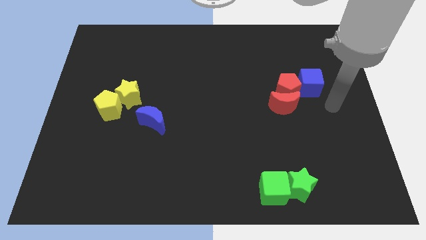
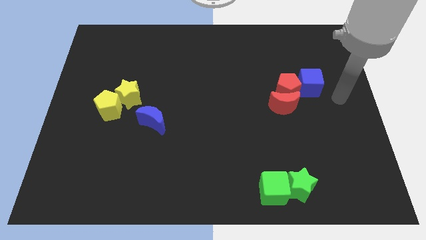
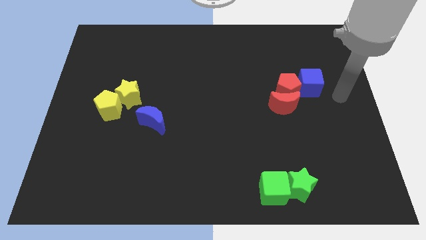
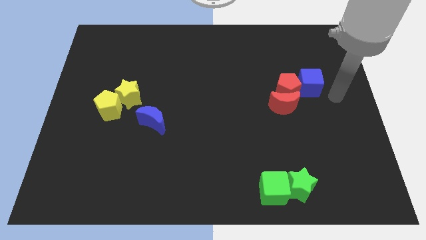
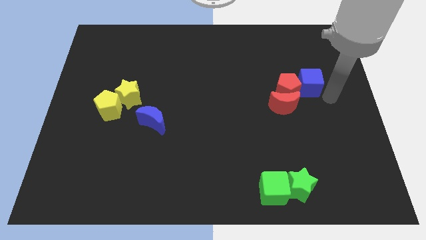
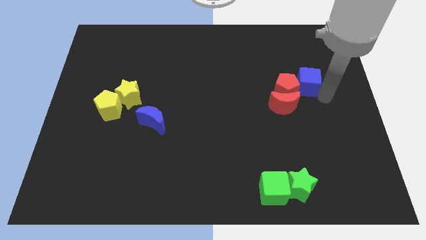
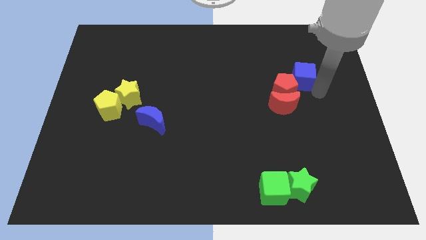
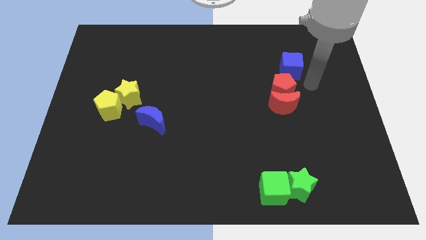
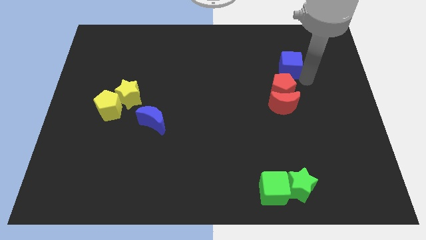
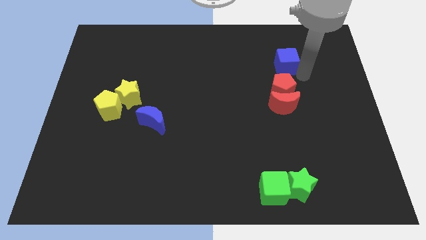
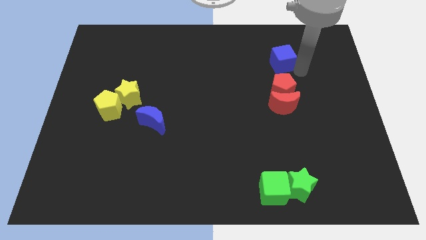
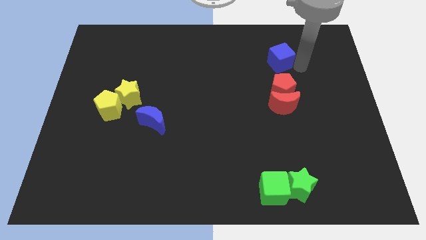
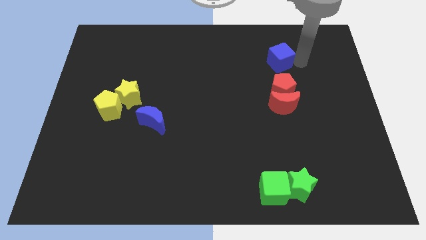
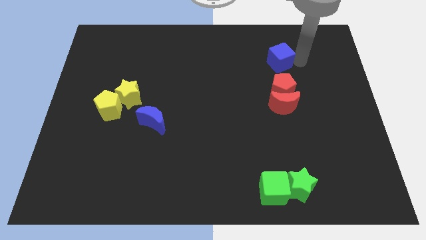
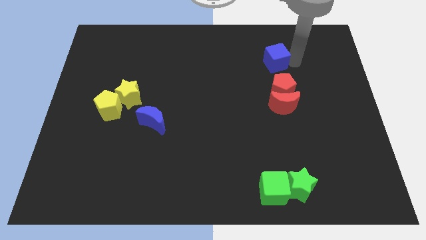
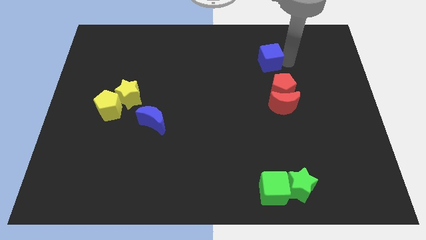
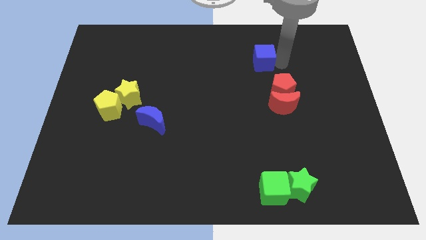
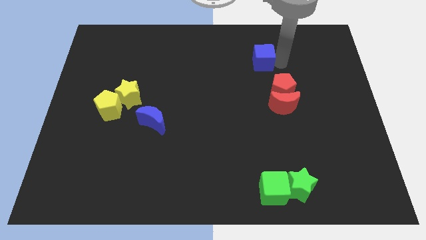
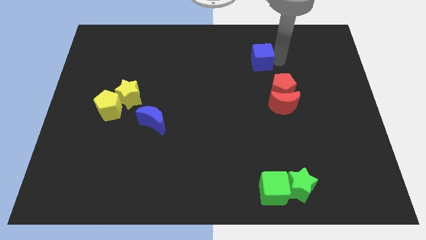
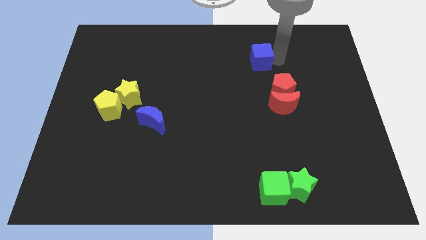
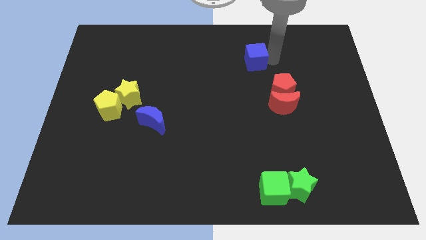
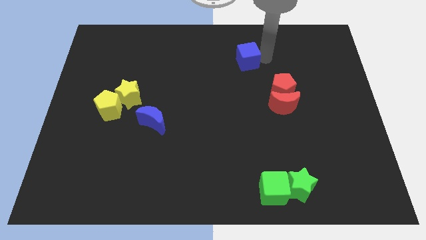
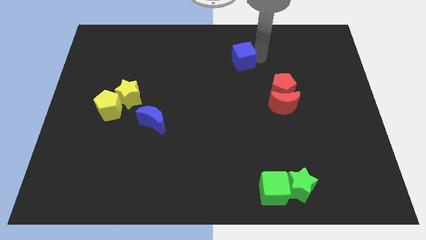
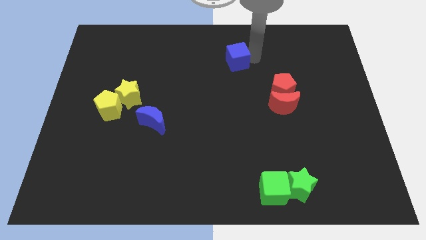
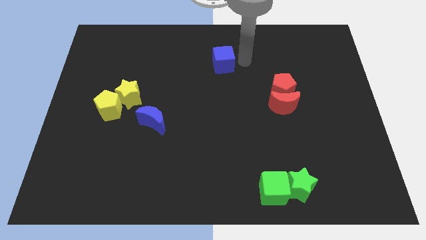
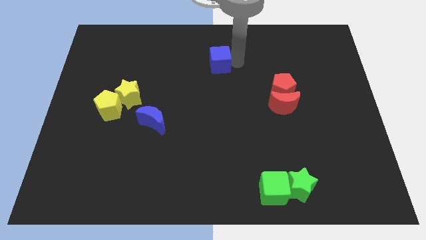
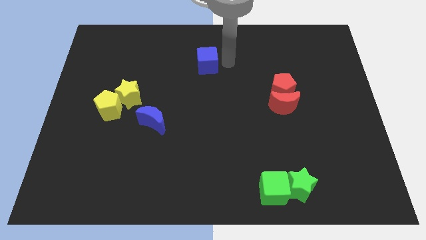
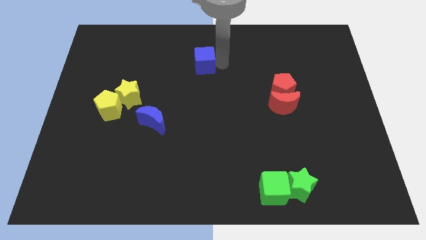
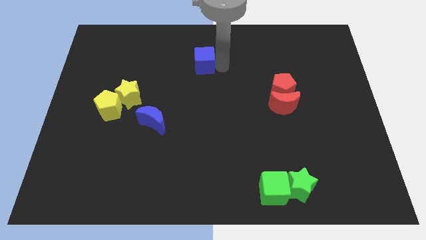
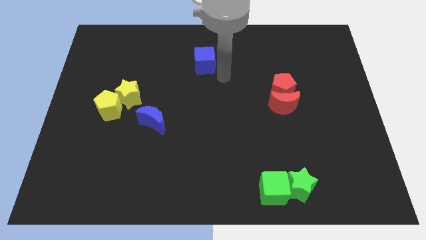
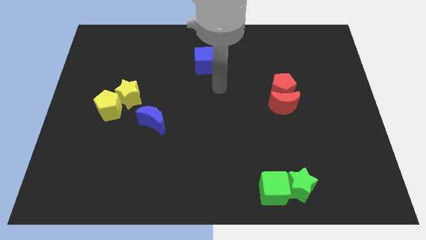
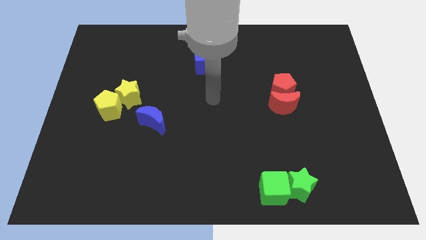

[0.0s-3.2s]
separate the blue cube from the red pentagon

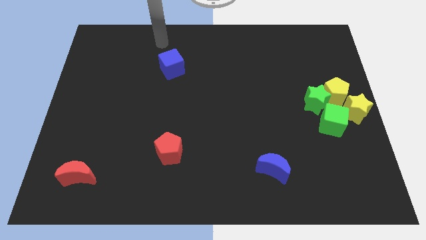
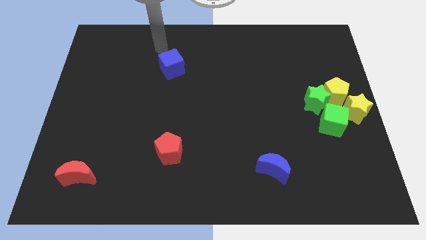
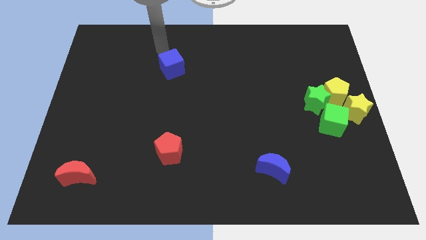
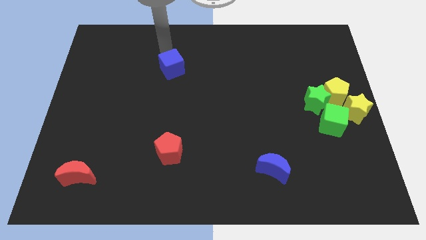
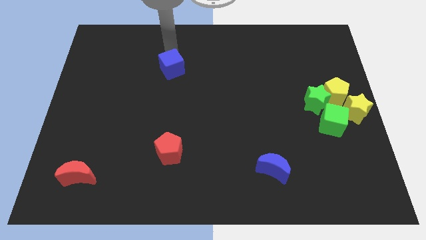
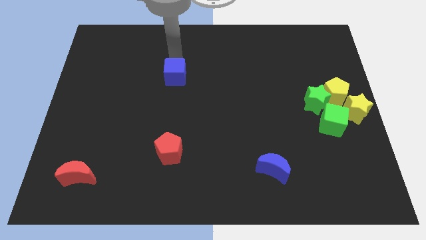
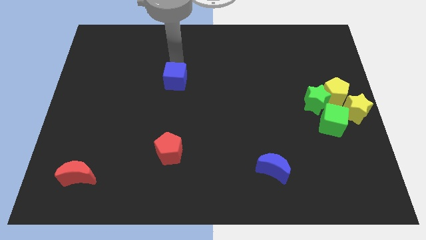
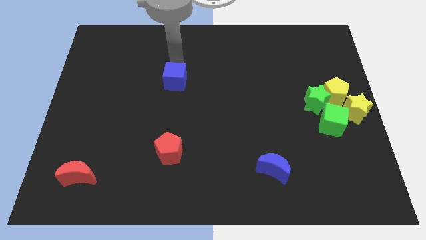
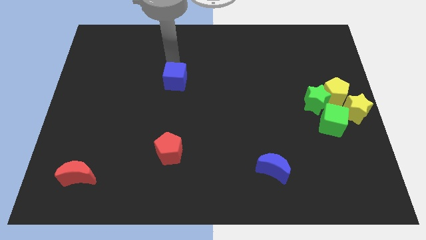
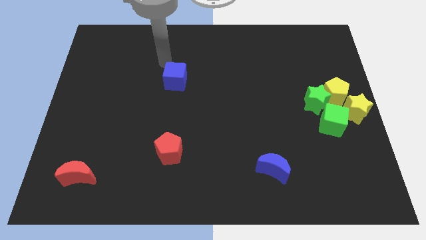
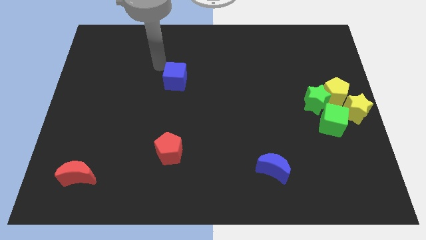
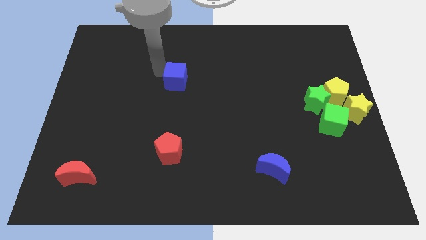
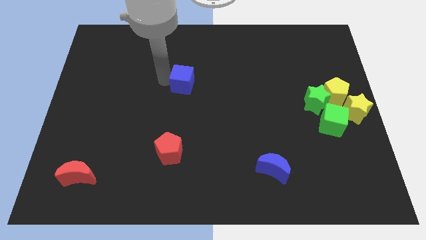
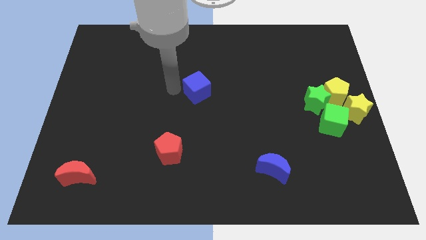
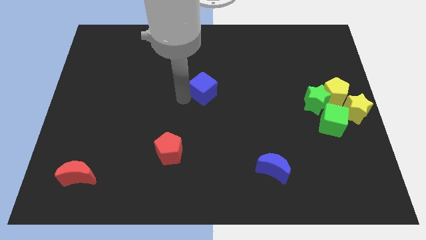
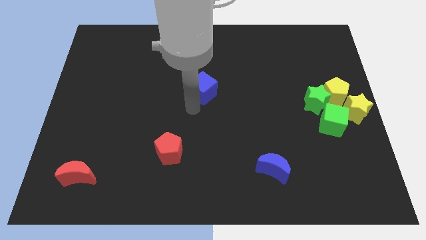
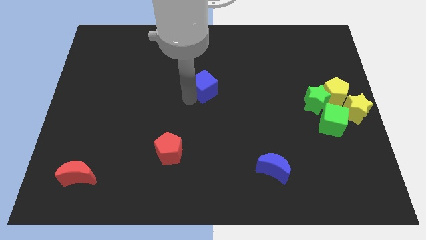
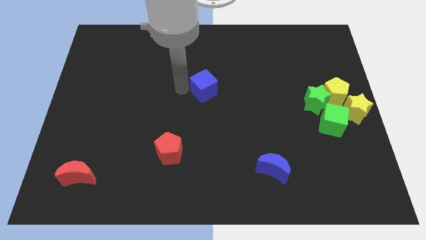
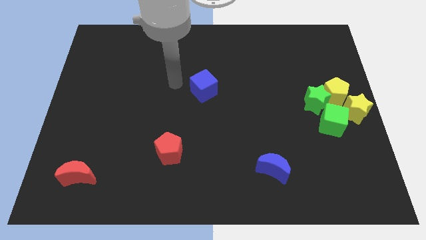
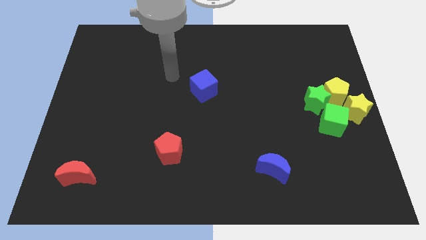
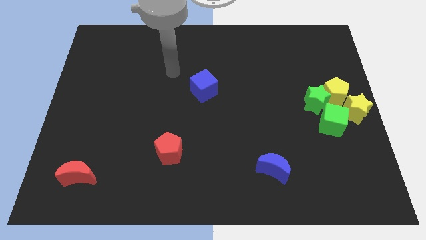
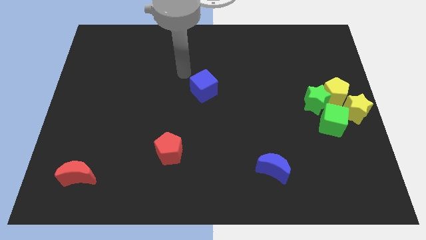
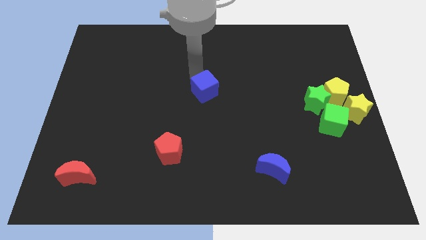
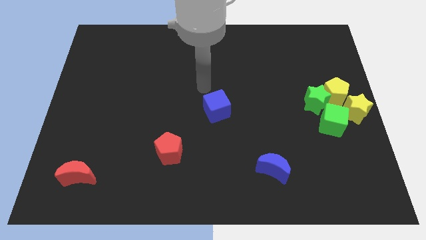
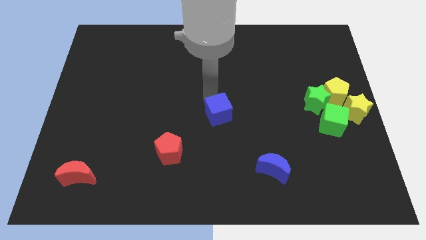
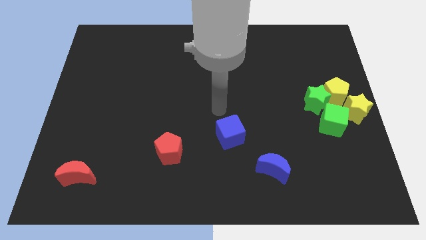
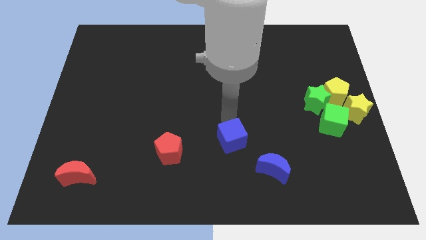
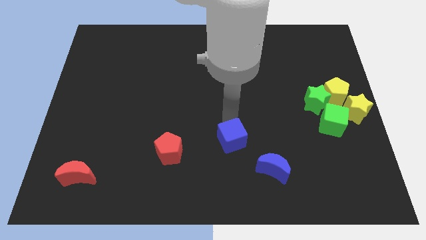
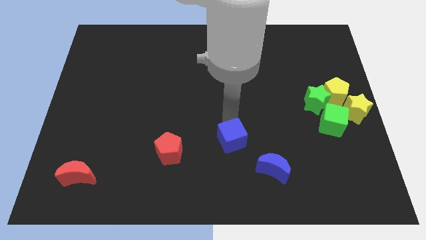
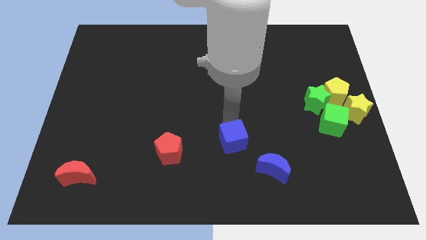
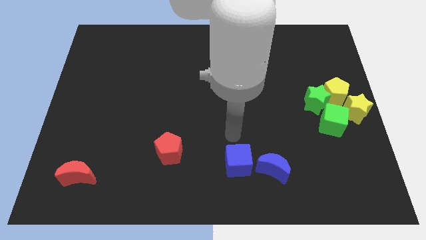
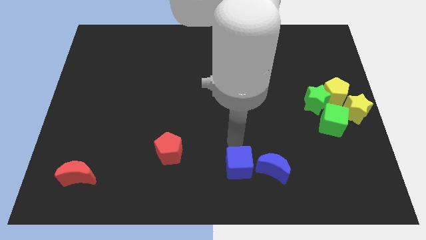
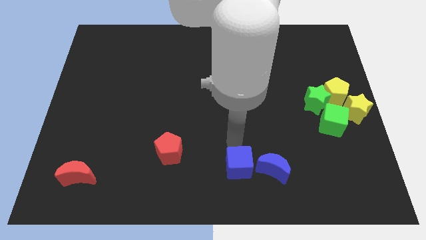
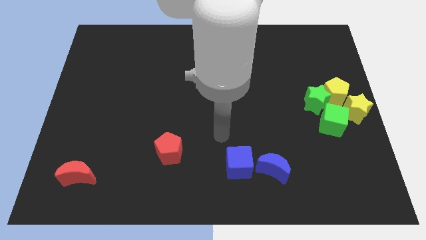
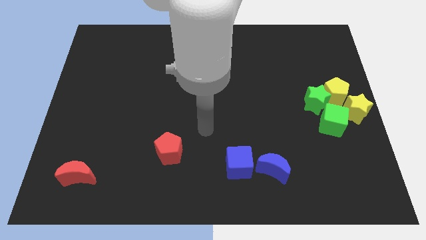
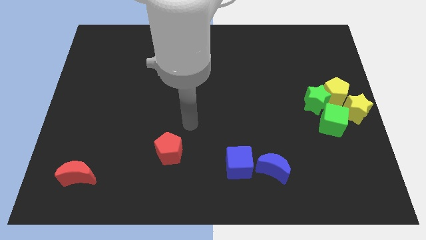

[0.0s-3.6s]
move blue cube left beside the blue moon

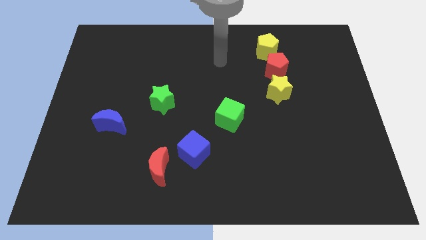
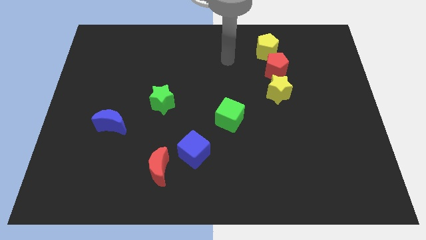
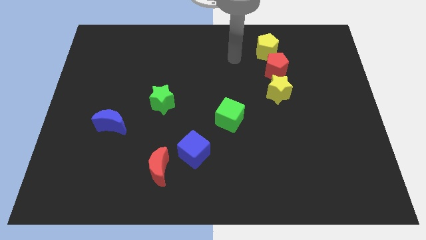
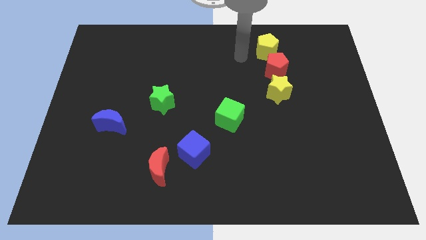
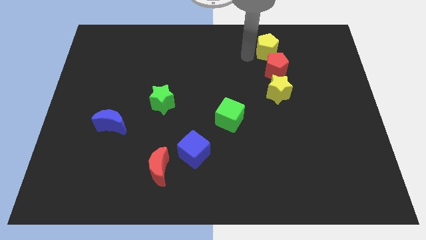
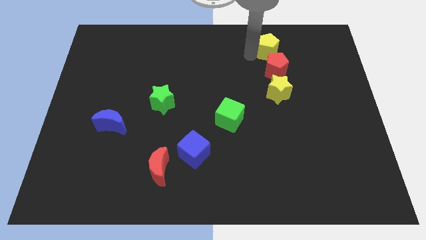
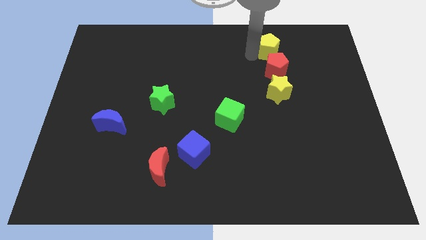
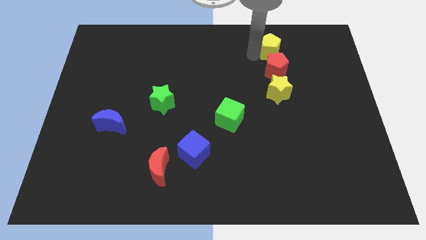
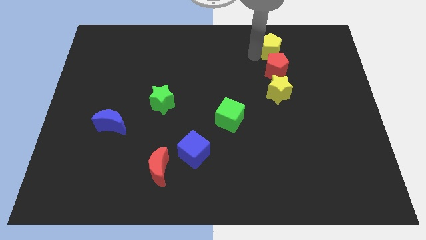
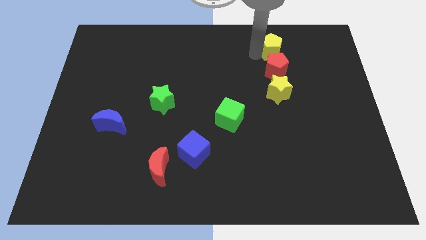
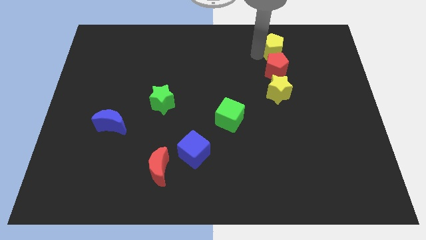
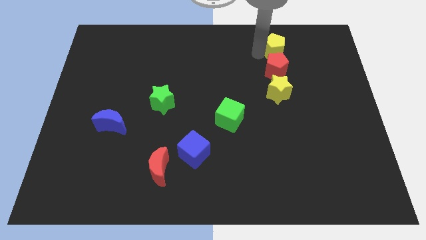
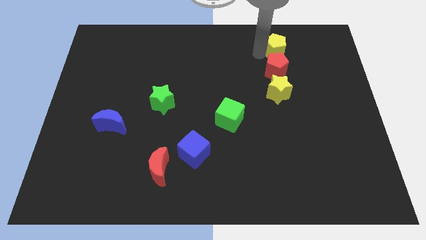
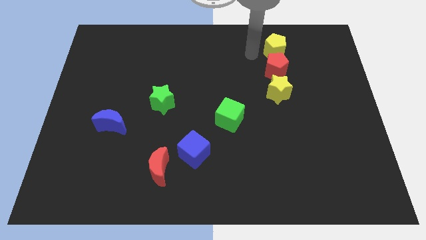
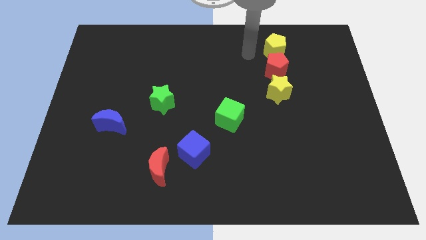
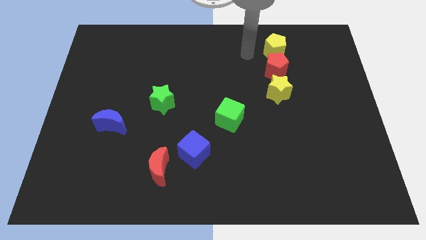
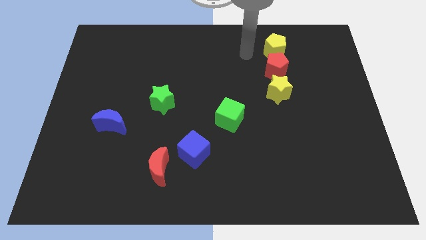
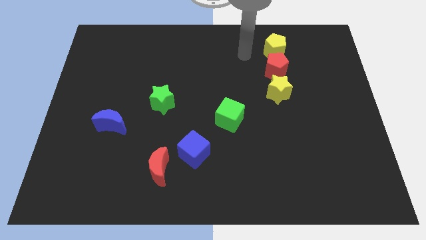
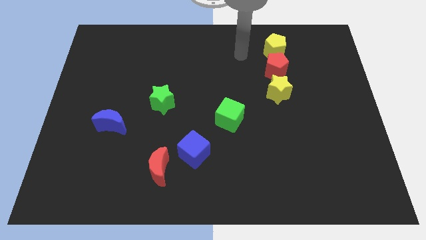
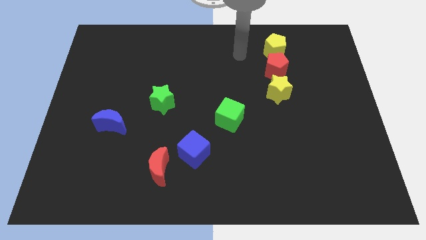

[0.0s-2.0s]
push the yellow pentagon slightly to the right side of the board
